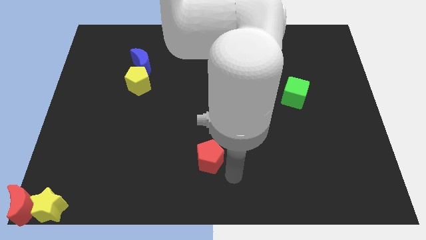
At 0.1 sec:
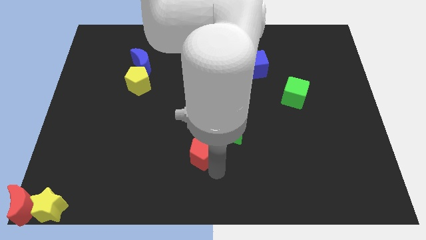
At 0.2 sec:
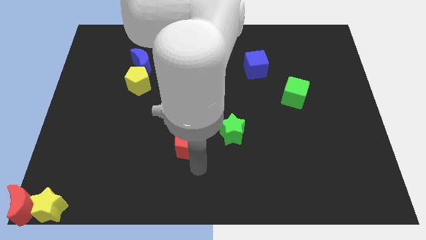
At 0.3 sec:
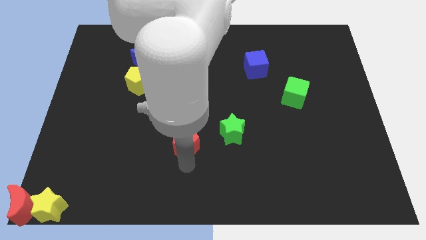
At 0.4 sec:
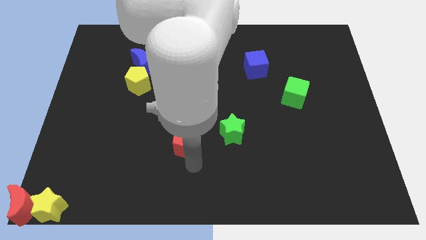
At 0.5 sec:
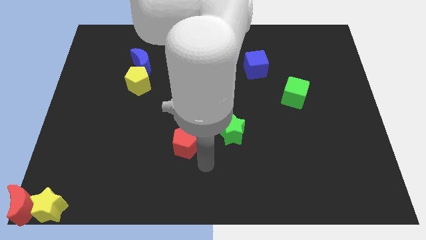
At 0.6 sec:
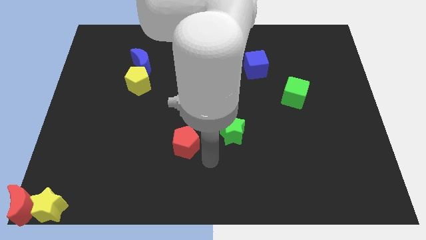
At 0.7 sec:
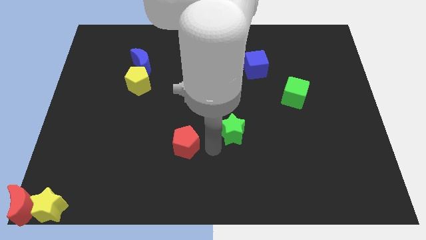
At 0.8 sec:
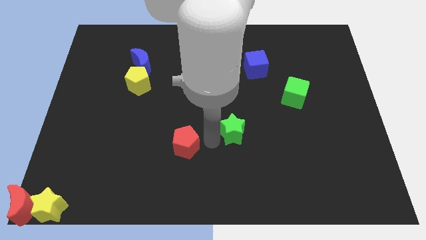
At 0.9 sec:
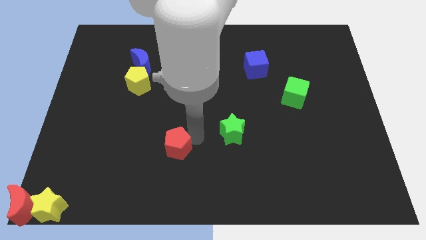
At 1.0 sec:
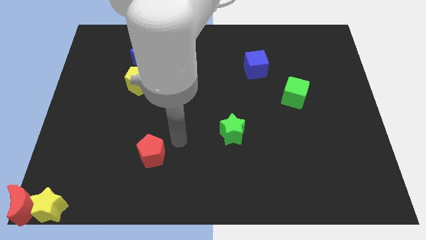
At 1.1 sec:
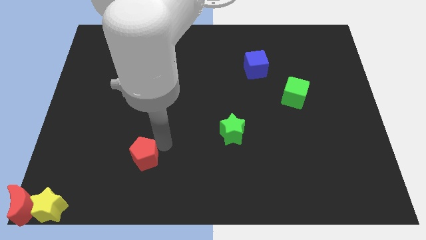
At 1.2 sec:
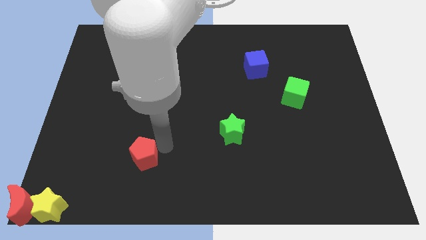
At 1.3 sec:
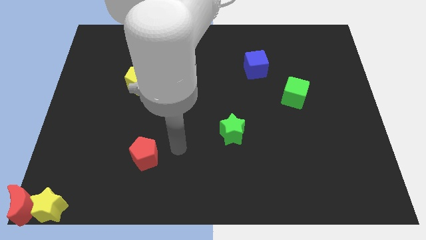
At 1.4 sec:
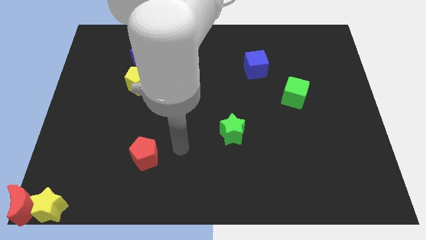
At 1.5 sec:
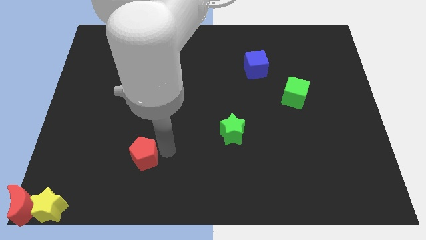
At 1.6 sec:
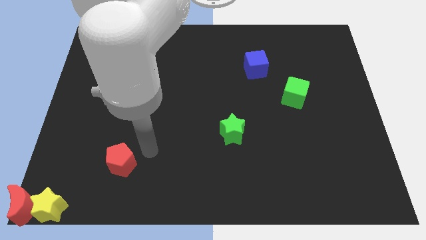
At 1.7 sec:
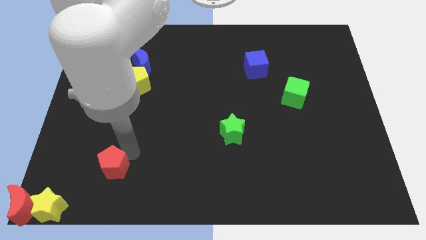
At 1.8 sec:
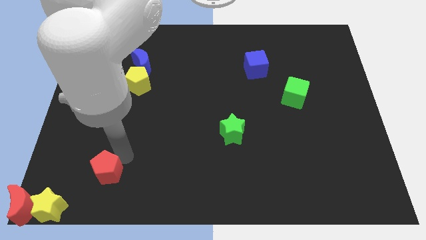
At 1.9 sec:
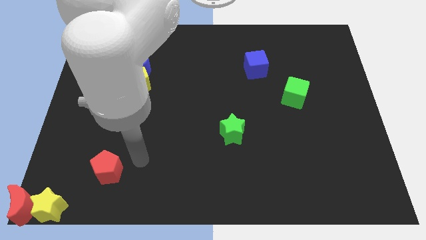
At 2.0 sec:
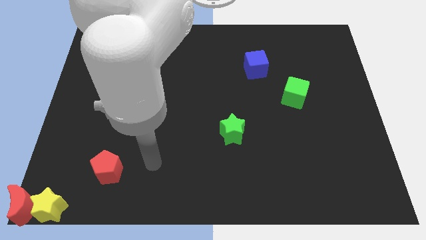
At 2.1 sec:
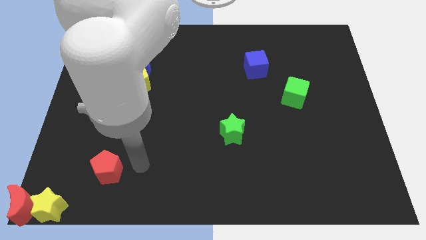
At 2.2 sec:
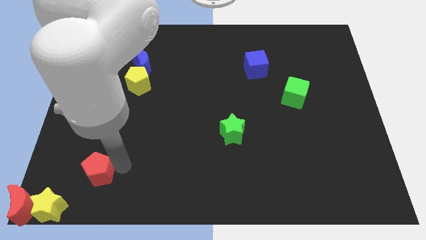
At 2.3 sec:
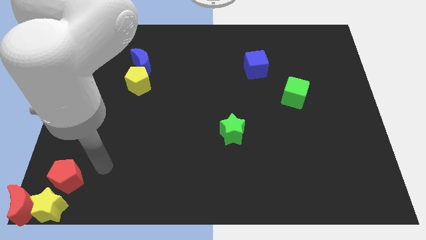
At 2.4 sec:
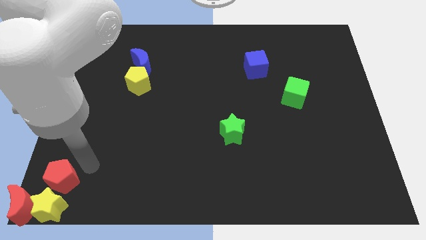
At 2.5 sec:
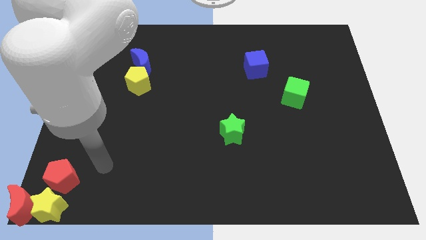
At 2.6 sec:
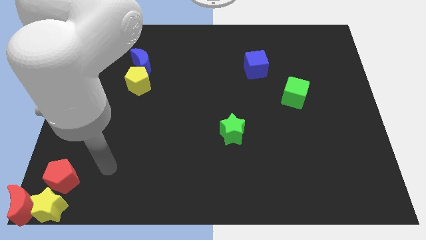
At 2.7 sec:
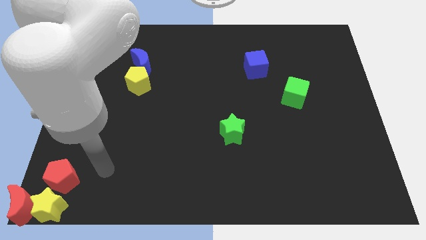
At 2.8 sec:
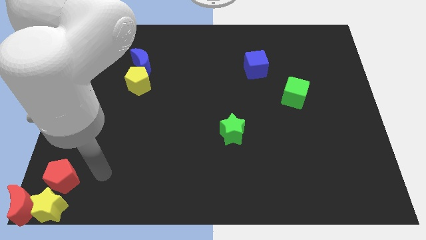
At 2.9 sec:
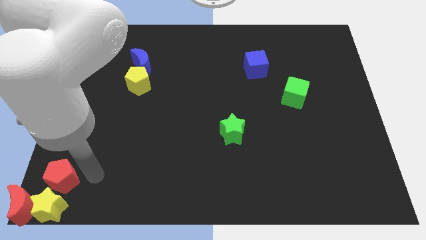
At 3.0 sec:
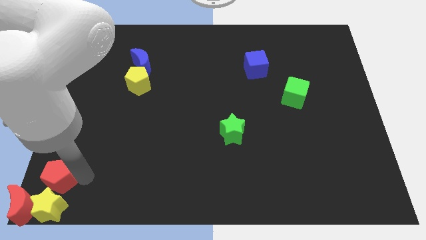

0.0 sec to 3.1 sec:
move red pentagon on top of yellow star

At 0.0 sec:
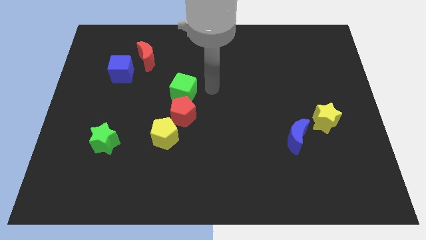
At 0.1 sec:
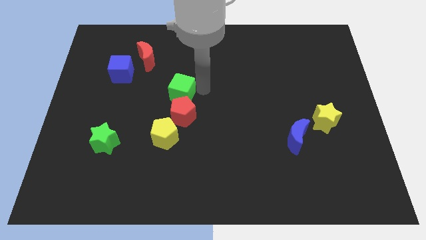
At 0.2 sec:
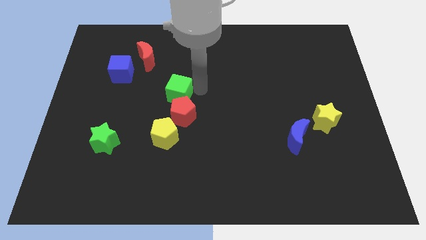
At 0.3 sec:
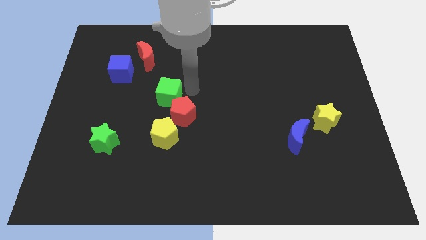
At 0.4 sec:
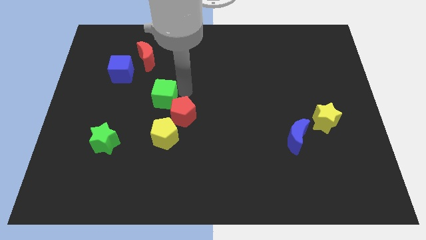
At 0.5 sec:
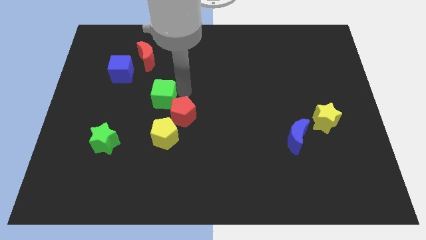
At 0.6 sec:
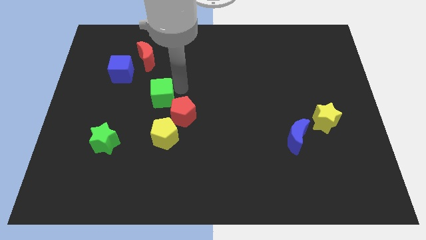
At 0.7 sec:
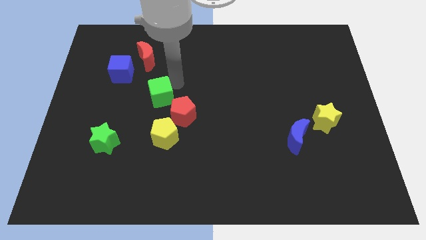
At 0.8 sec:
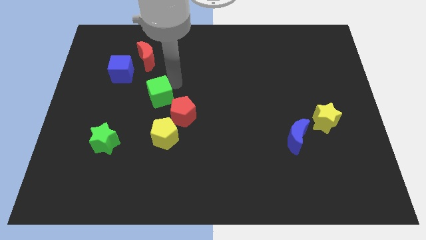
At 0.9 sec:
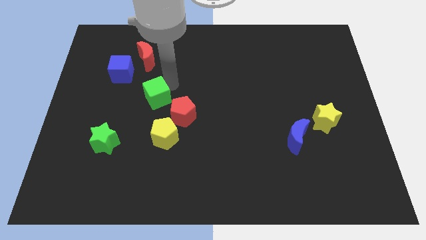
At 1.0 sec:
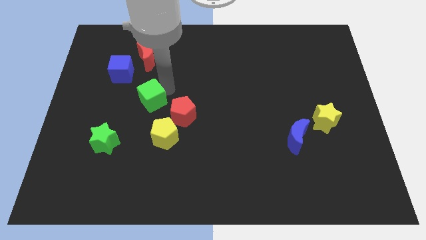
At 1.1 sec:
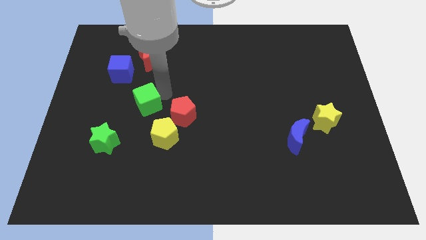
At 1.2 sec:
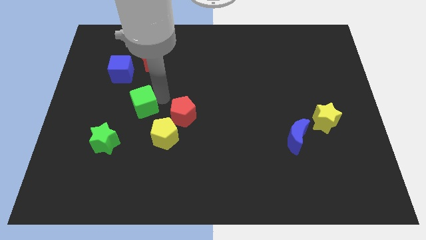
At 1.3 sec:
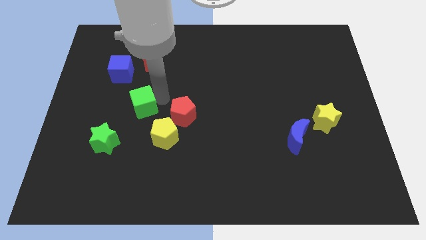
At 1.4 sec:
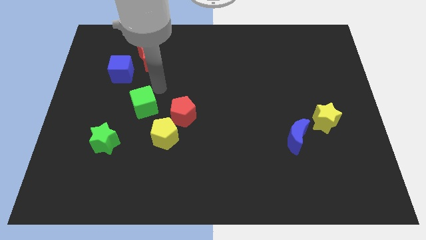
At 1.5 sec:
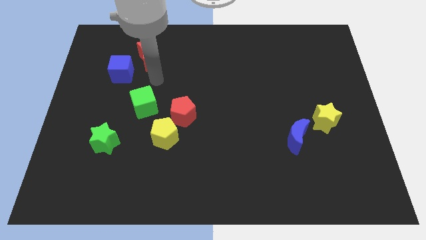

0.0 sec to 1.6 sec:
slide the green cube to the top left side of the yellow pentagon

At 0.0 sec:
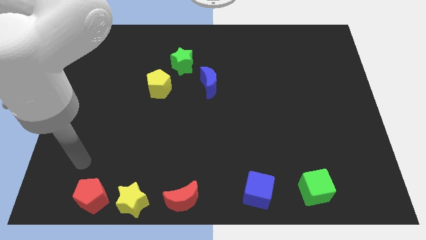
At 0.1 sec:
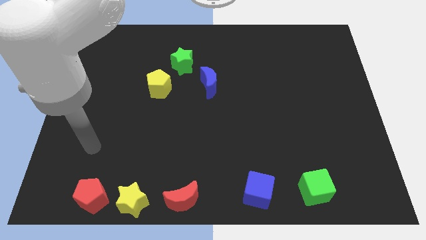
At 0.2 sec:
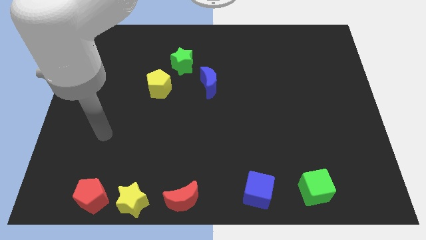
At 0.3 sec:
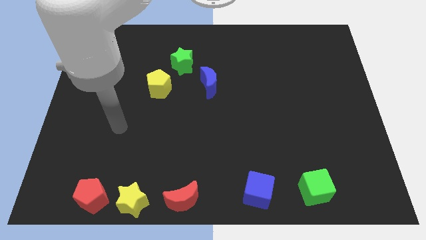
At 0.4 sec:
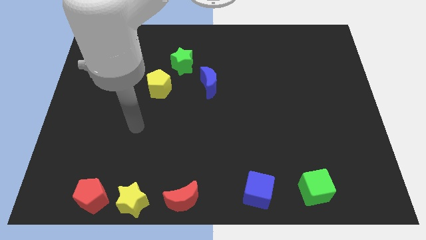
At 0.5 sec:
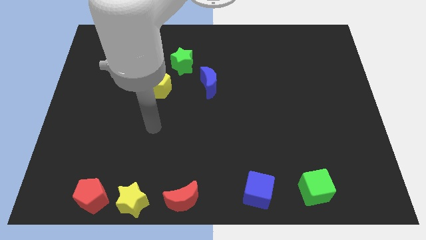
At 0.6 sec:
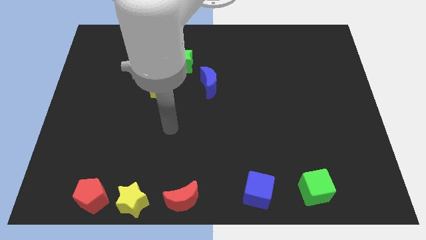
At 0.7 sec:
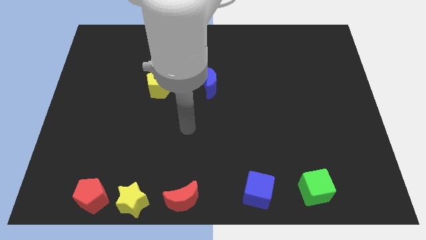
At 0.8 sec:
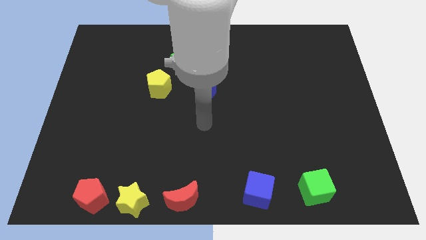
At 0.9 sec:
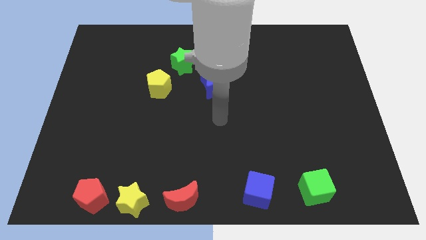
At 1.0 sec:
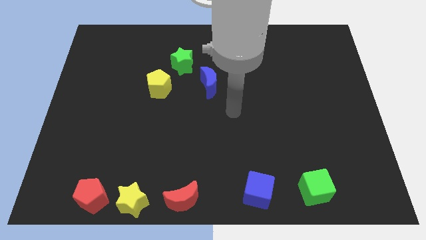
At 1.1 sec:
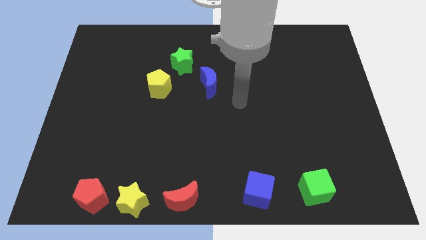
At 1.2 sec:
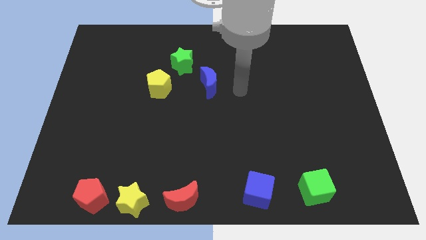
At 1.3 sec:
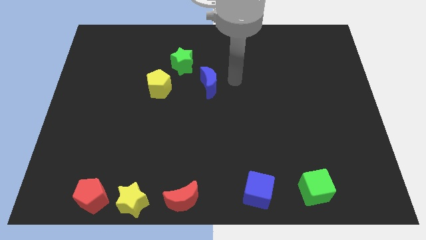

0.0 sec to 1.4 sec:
move your arm towards the center of the board

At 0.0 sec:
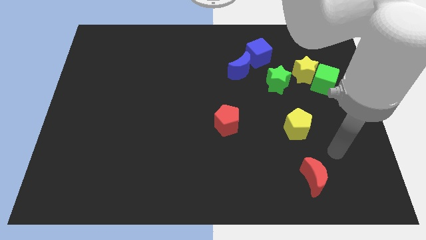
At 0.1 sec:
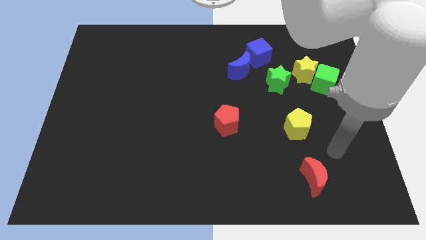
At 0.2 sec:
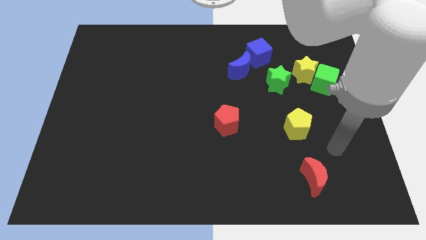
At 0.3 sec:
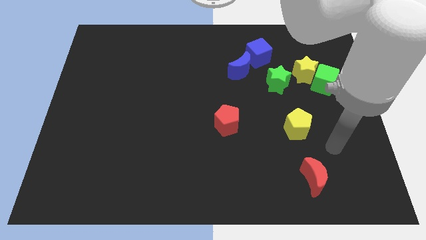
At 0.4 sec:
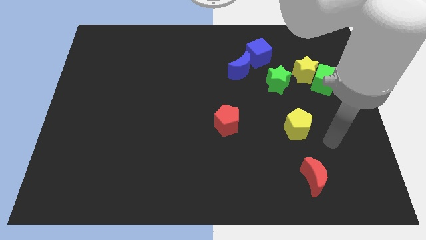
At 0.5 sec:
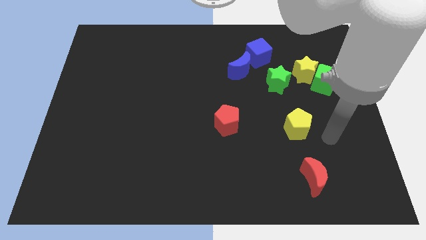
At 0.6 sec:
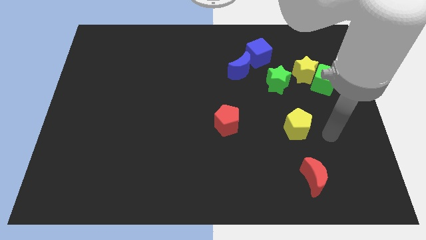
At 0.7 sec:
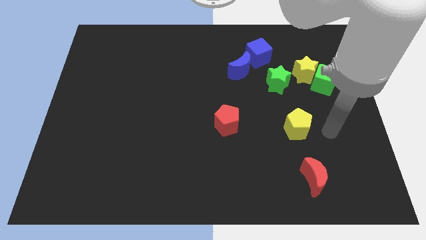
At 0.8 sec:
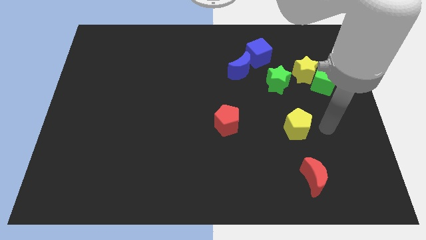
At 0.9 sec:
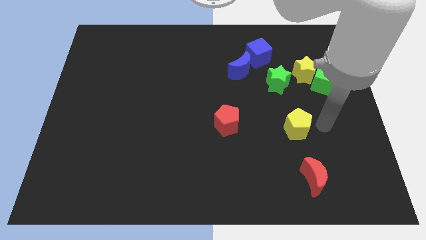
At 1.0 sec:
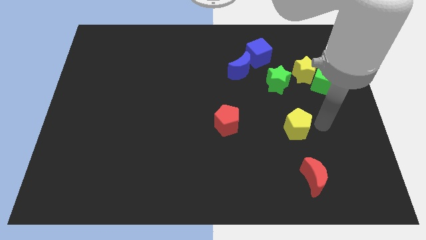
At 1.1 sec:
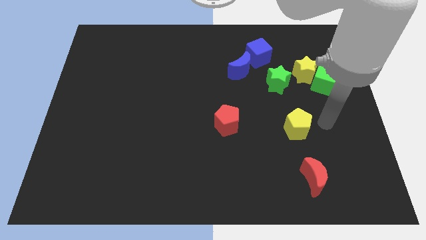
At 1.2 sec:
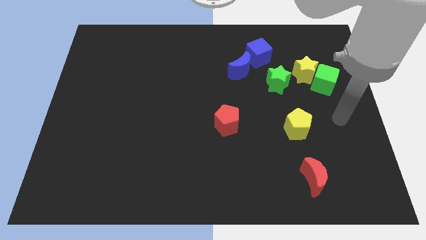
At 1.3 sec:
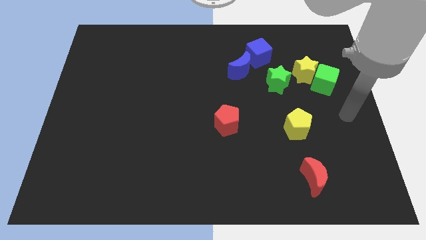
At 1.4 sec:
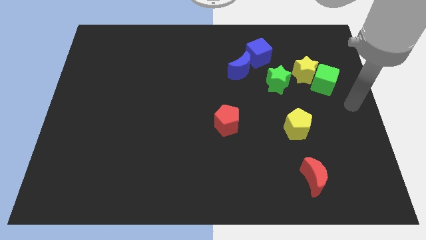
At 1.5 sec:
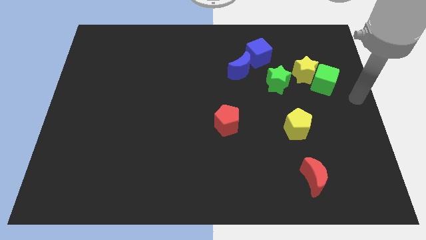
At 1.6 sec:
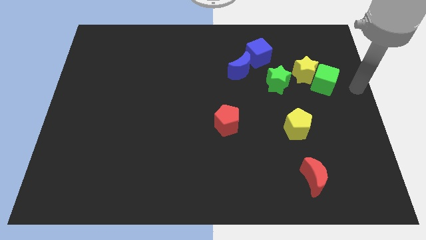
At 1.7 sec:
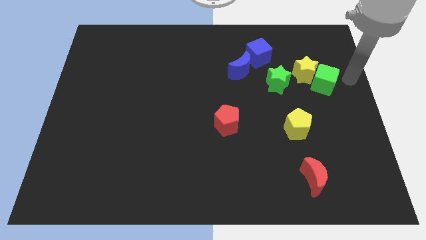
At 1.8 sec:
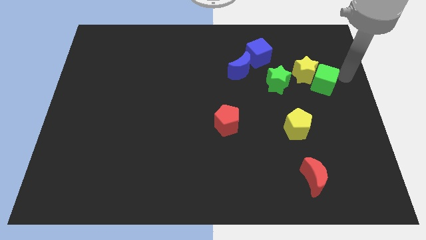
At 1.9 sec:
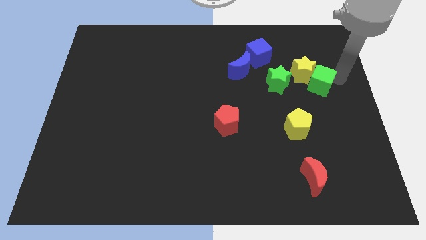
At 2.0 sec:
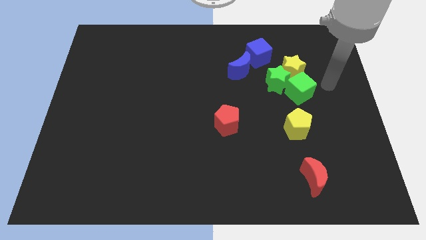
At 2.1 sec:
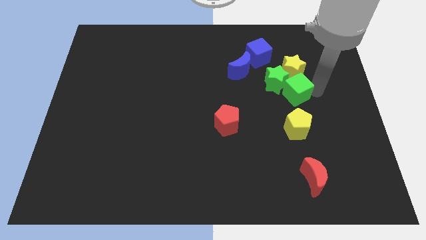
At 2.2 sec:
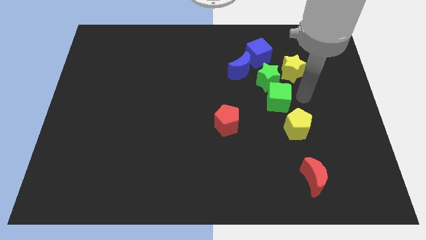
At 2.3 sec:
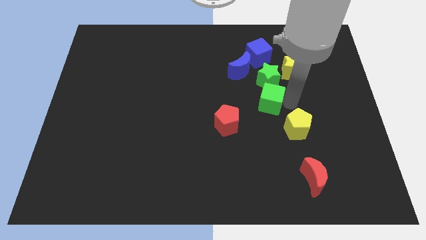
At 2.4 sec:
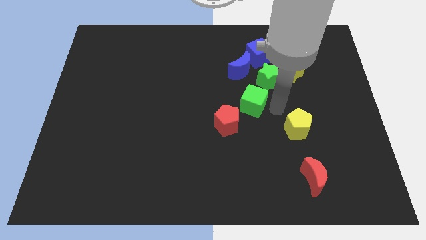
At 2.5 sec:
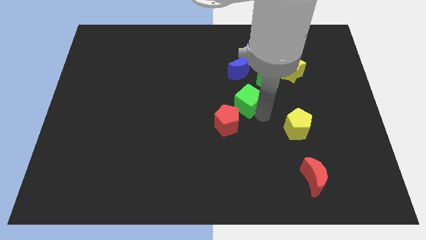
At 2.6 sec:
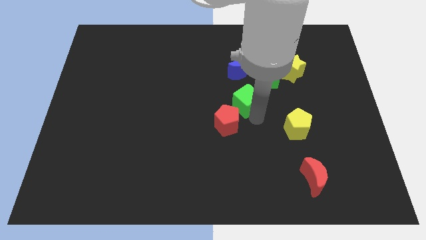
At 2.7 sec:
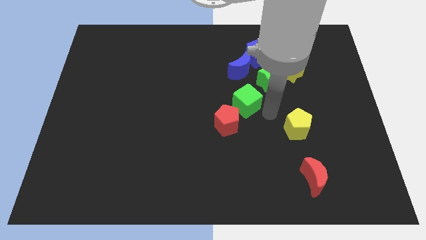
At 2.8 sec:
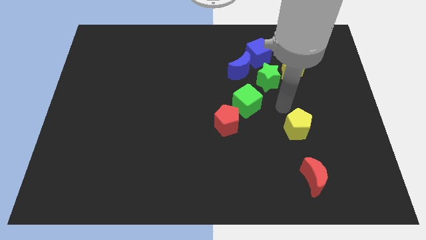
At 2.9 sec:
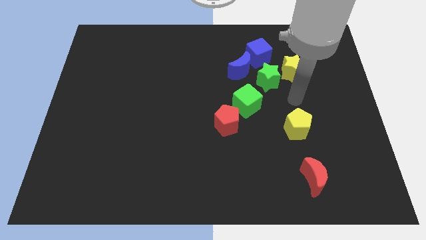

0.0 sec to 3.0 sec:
place the green cube between green star and red pentagon
